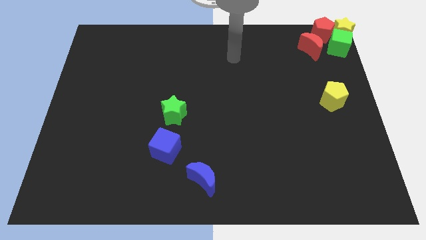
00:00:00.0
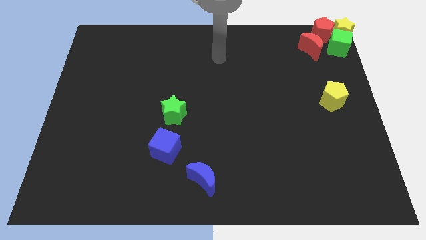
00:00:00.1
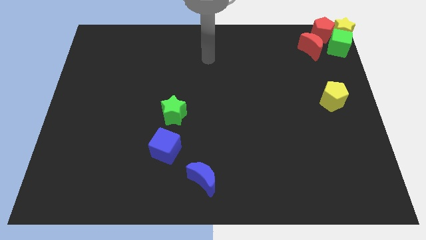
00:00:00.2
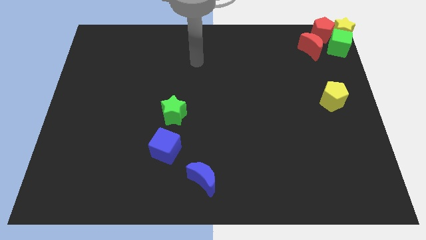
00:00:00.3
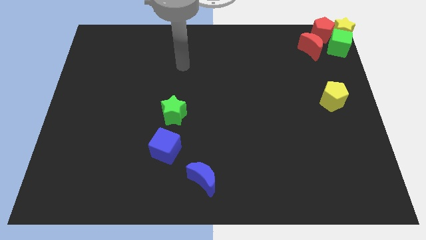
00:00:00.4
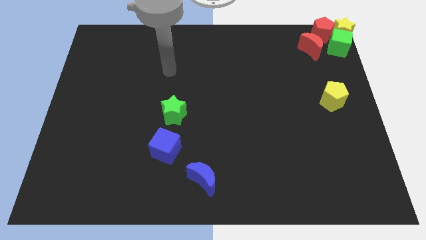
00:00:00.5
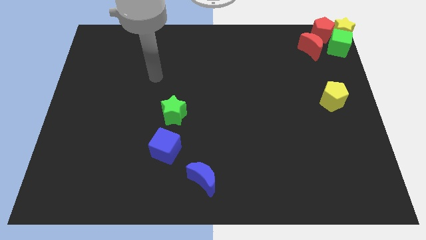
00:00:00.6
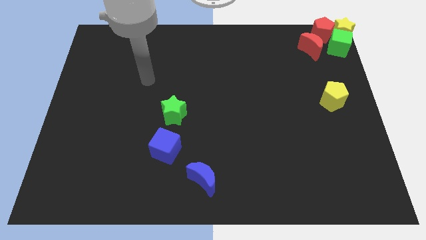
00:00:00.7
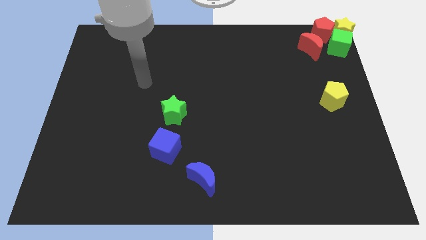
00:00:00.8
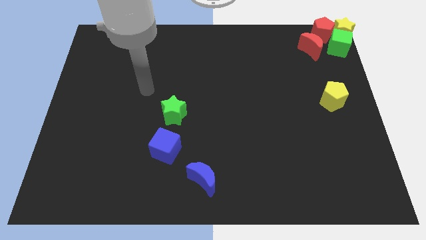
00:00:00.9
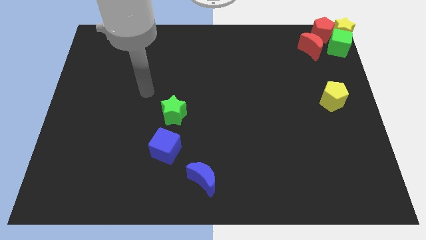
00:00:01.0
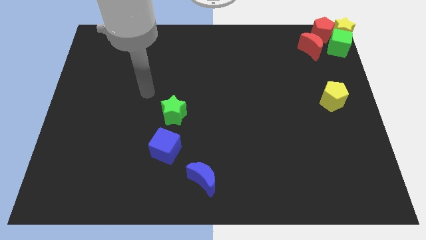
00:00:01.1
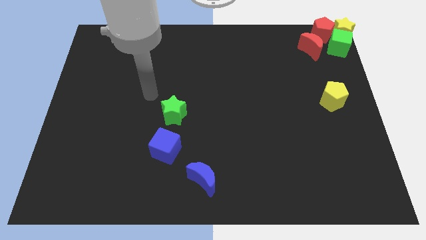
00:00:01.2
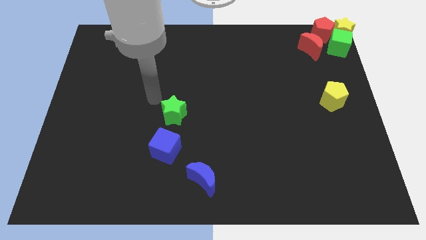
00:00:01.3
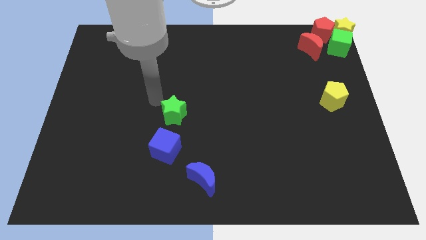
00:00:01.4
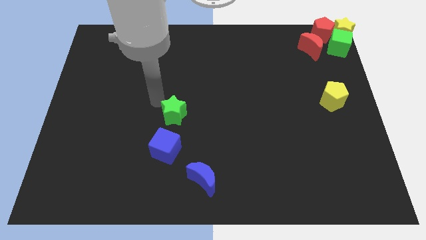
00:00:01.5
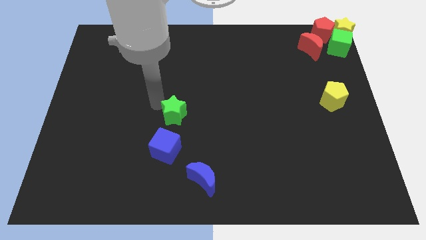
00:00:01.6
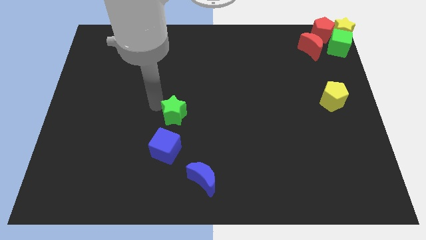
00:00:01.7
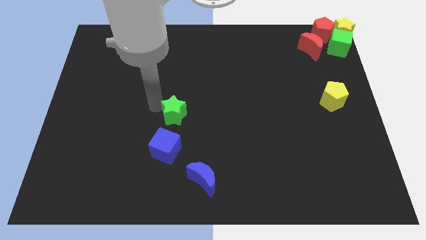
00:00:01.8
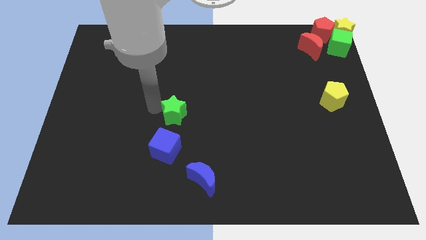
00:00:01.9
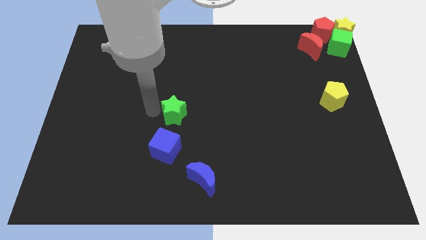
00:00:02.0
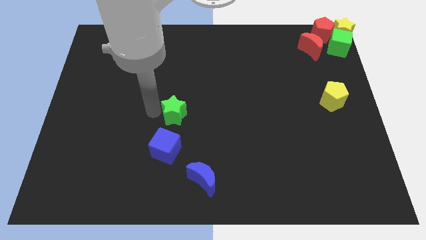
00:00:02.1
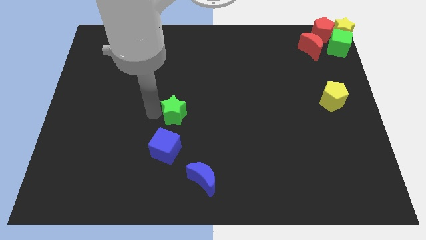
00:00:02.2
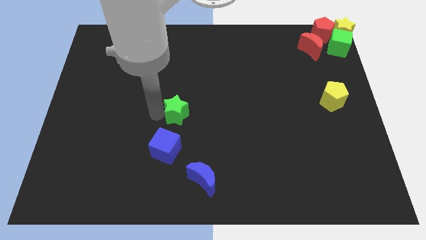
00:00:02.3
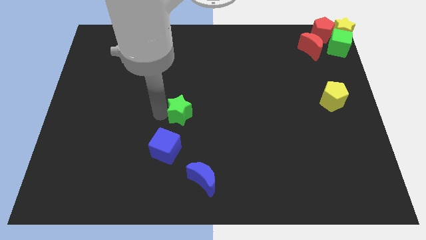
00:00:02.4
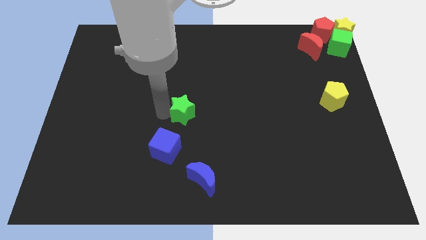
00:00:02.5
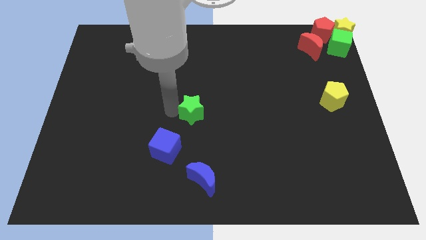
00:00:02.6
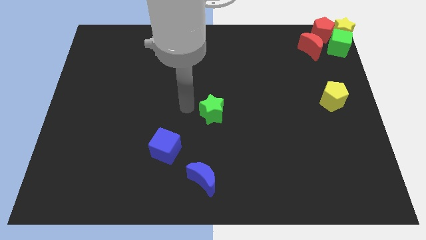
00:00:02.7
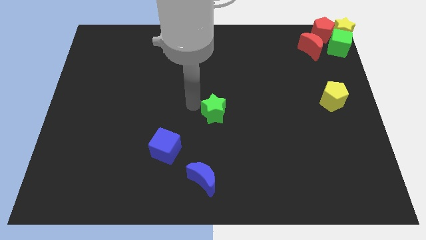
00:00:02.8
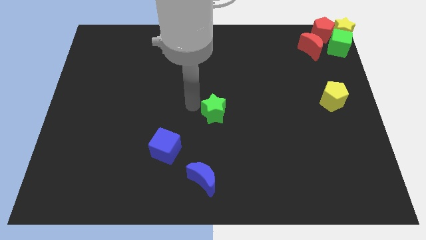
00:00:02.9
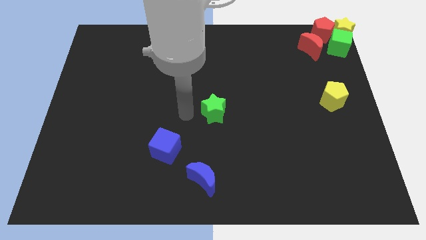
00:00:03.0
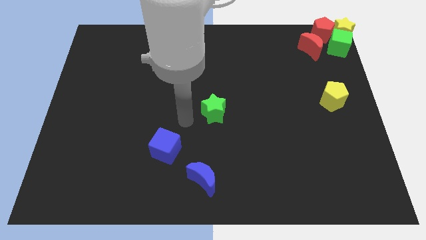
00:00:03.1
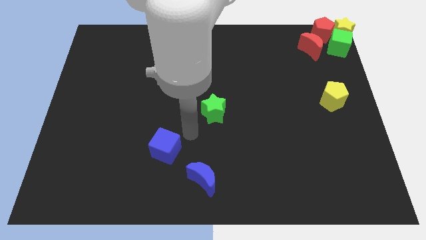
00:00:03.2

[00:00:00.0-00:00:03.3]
place the green star vertically above the blue moon

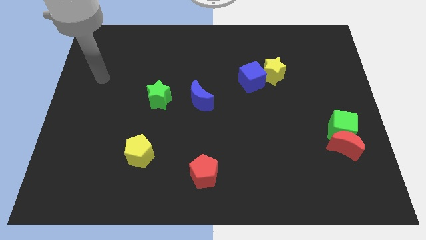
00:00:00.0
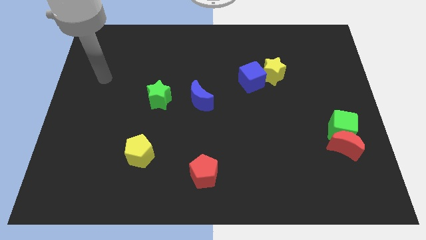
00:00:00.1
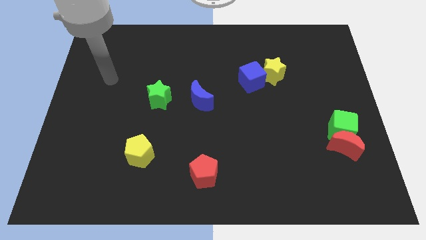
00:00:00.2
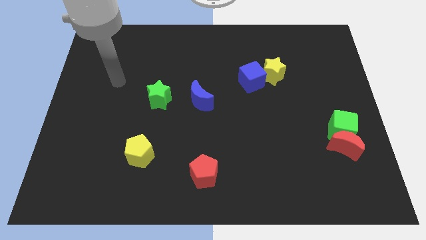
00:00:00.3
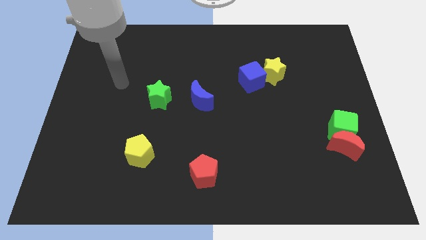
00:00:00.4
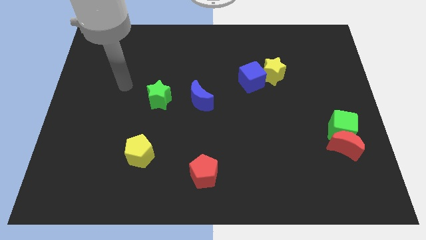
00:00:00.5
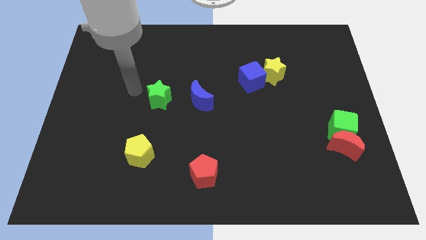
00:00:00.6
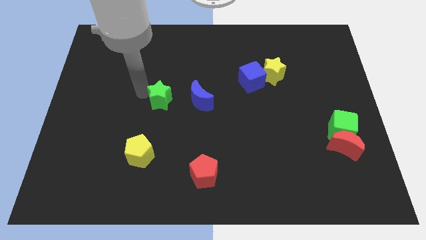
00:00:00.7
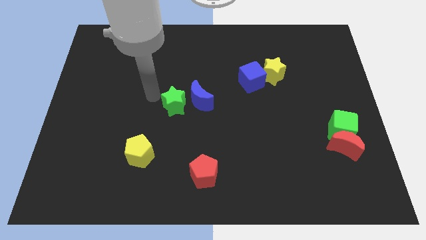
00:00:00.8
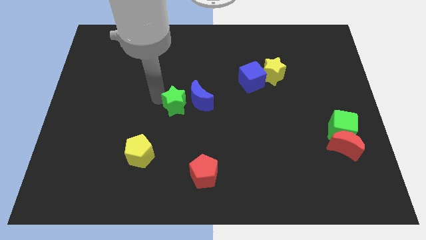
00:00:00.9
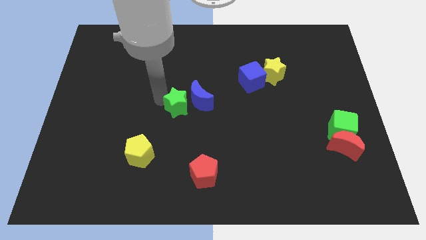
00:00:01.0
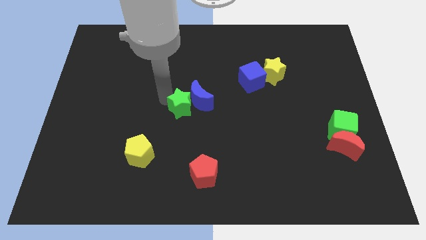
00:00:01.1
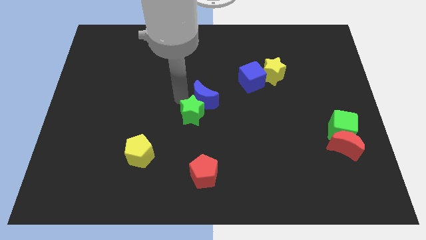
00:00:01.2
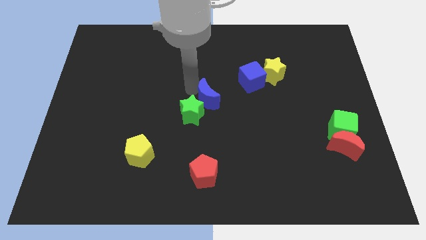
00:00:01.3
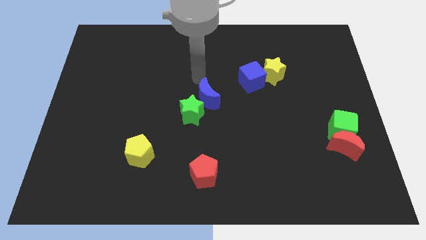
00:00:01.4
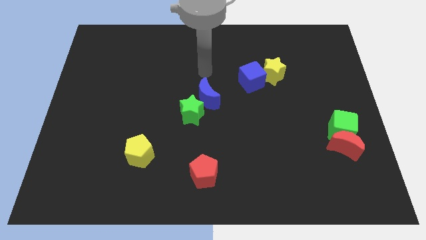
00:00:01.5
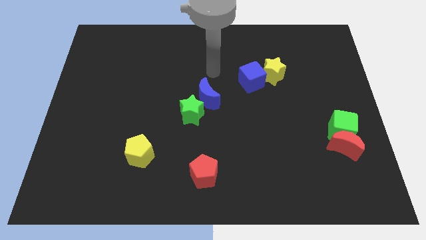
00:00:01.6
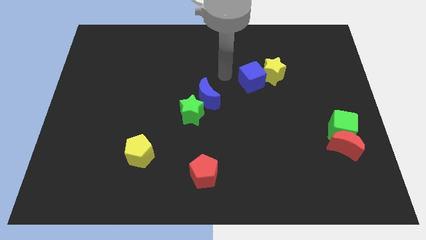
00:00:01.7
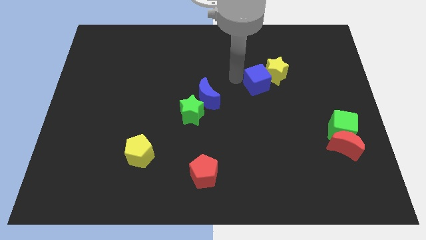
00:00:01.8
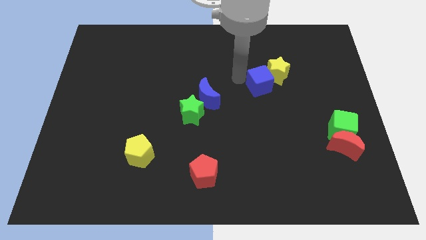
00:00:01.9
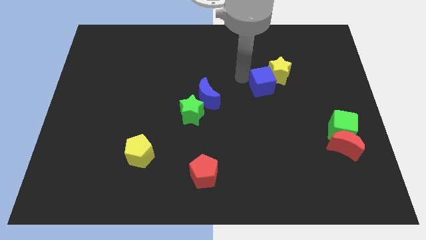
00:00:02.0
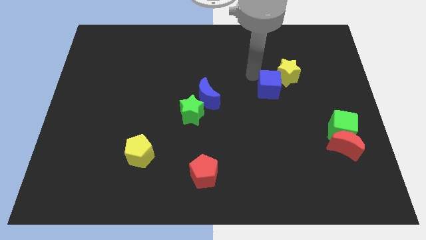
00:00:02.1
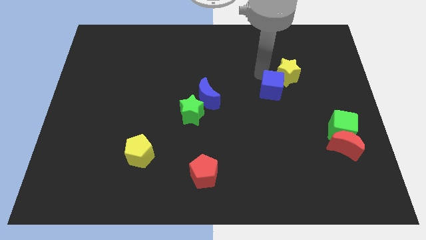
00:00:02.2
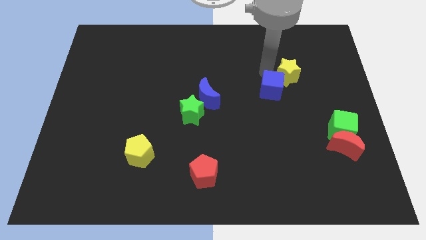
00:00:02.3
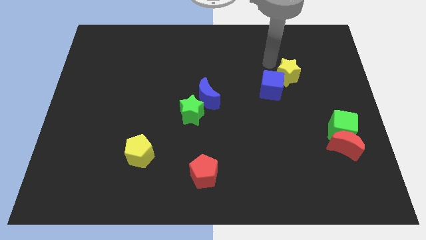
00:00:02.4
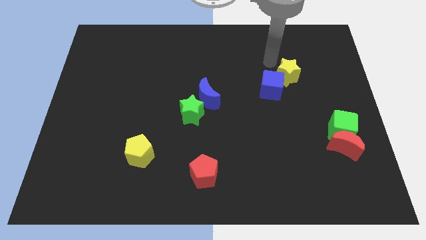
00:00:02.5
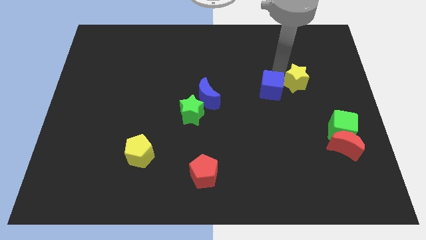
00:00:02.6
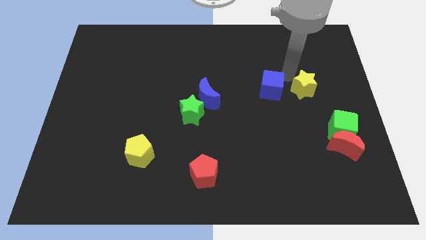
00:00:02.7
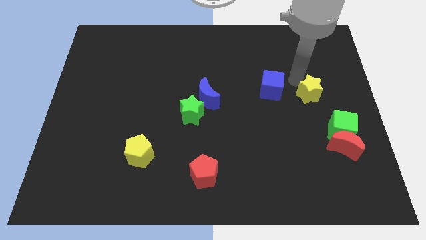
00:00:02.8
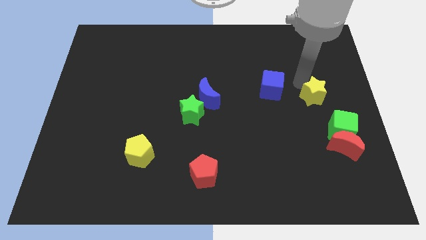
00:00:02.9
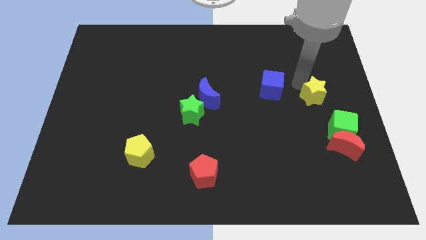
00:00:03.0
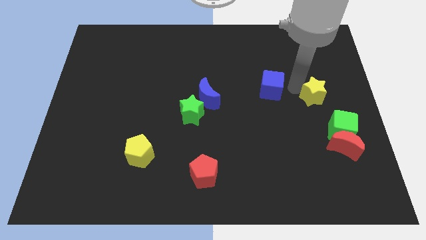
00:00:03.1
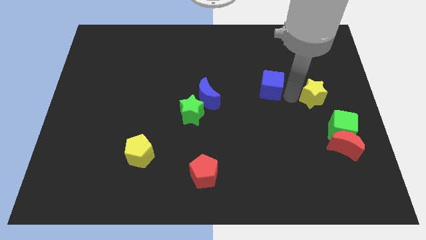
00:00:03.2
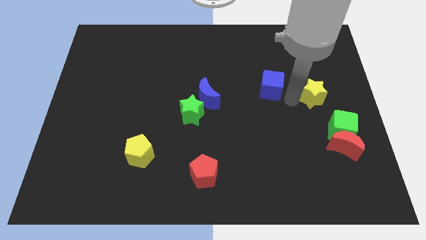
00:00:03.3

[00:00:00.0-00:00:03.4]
push the yellow star slightly to the right side

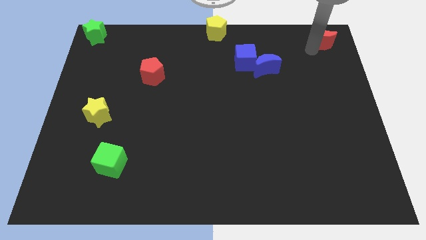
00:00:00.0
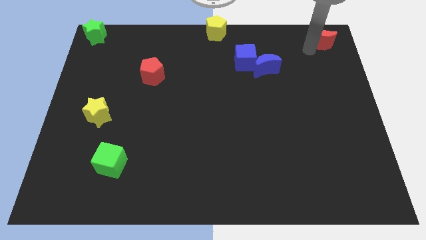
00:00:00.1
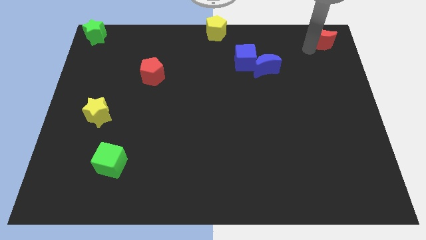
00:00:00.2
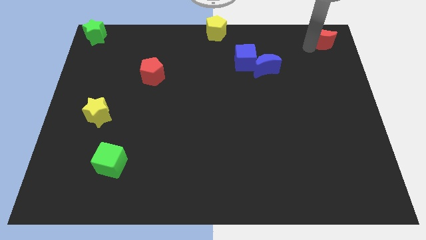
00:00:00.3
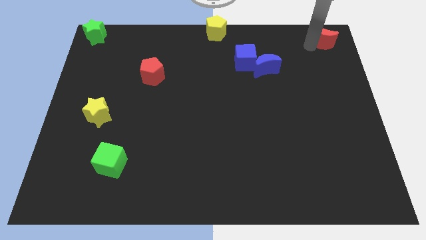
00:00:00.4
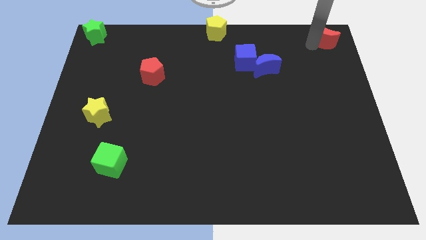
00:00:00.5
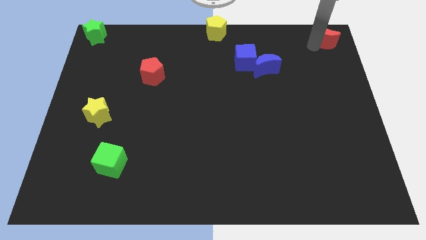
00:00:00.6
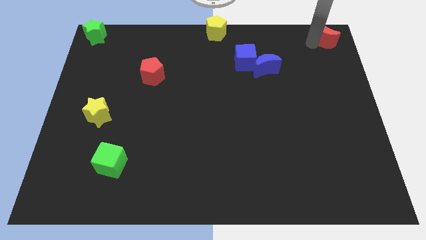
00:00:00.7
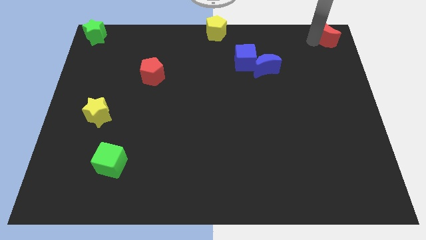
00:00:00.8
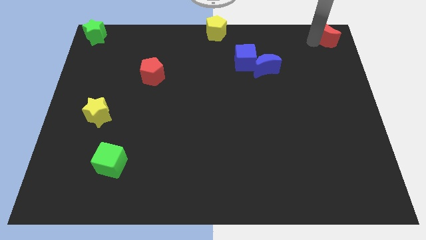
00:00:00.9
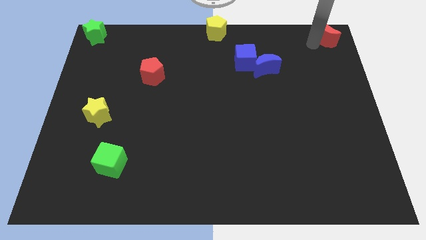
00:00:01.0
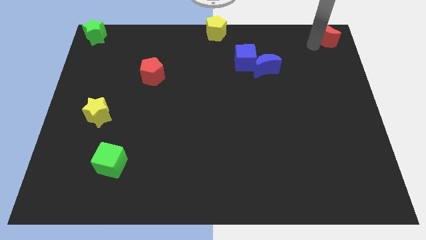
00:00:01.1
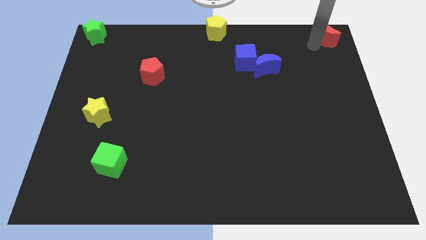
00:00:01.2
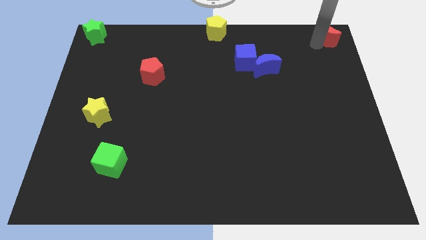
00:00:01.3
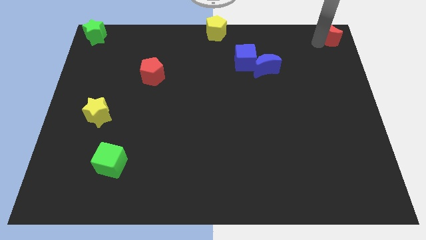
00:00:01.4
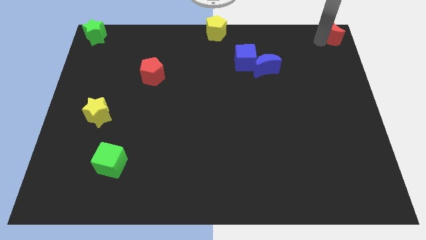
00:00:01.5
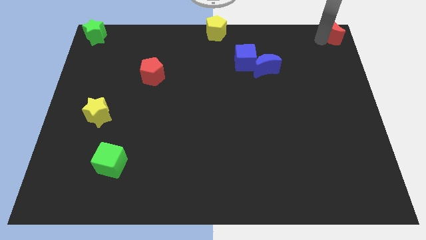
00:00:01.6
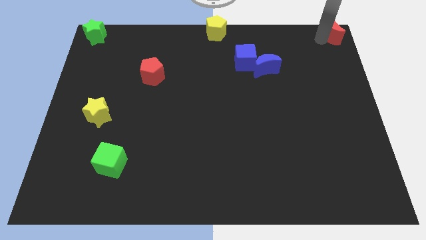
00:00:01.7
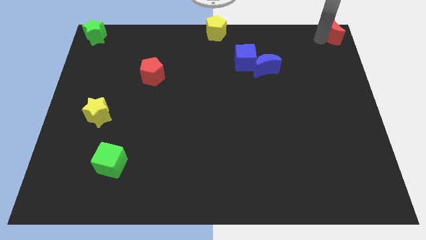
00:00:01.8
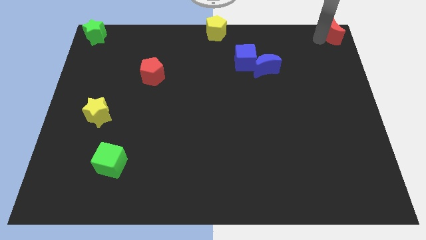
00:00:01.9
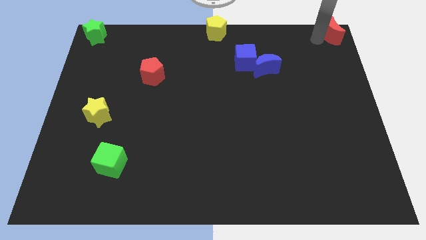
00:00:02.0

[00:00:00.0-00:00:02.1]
move the red crescent to the top right of the board

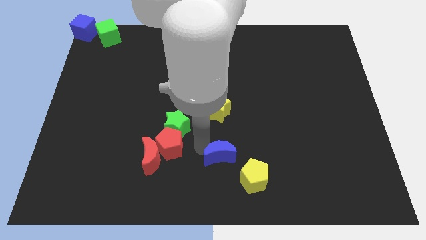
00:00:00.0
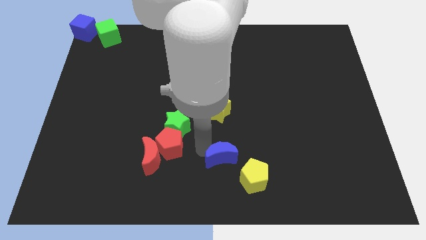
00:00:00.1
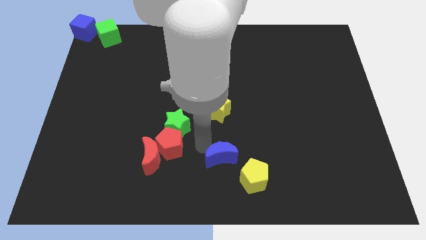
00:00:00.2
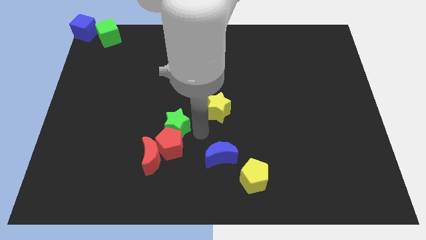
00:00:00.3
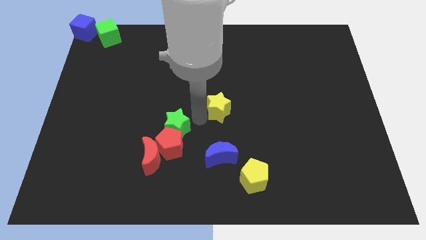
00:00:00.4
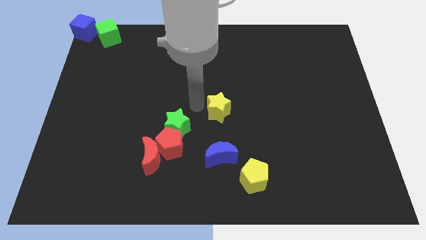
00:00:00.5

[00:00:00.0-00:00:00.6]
move your arm away from blue moon
